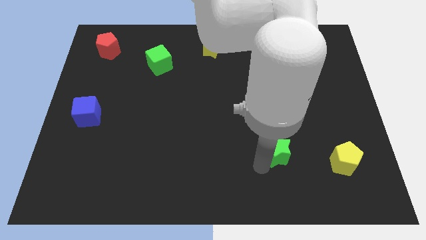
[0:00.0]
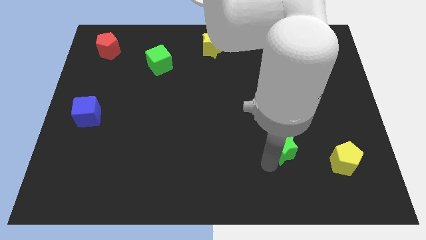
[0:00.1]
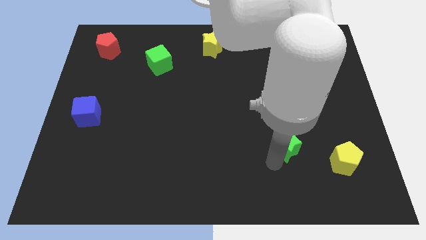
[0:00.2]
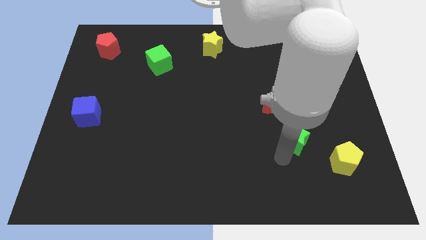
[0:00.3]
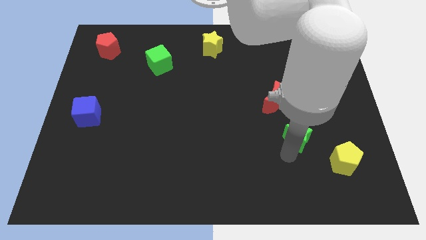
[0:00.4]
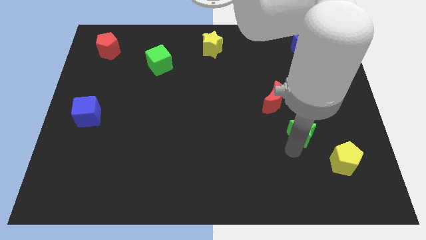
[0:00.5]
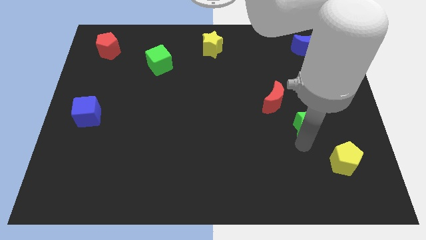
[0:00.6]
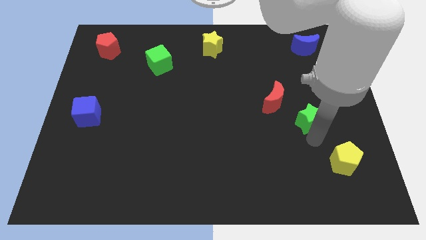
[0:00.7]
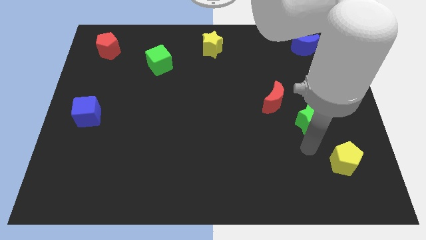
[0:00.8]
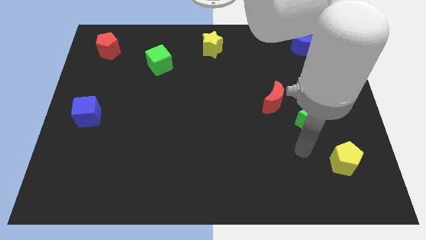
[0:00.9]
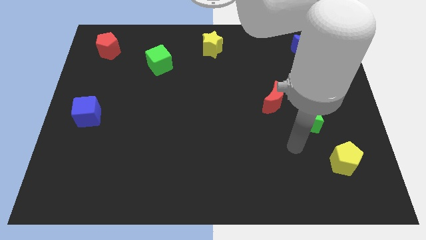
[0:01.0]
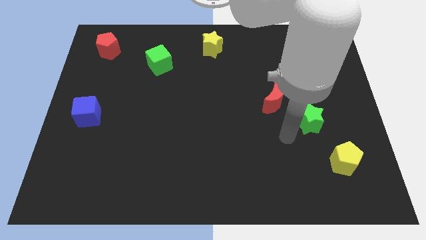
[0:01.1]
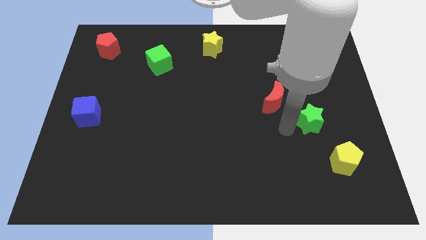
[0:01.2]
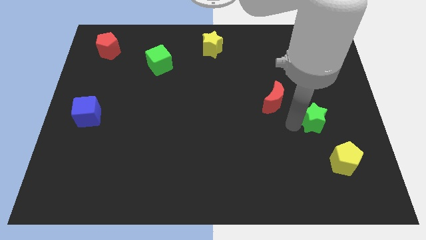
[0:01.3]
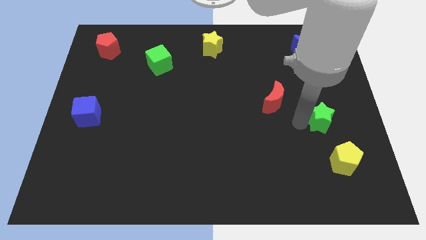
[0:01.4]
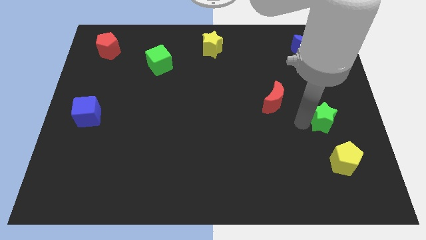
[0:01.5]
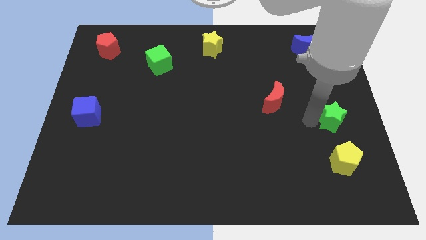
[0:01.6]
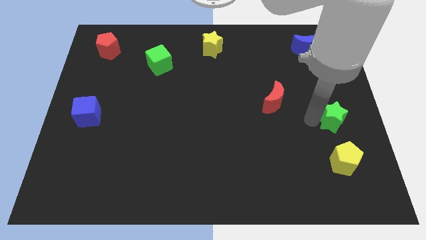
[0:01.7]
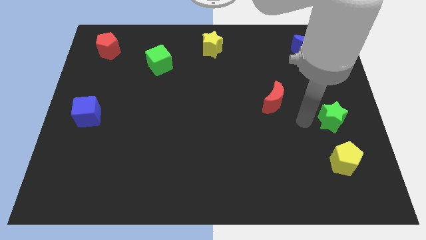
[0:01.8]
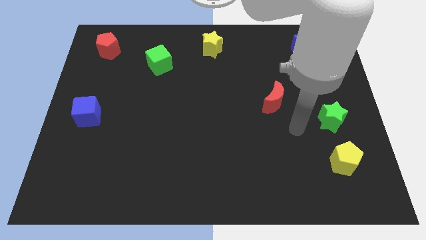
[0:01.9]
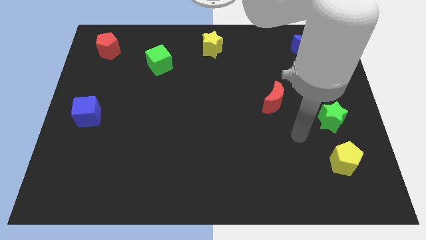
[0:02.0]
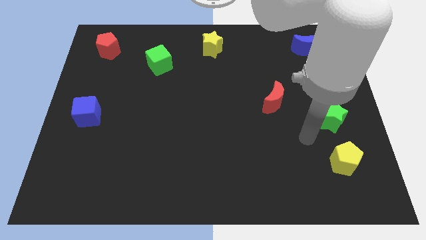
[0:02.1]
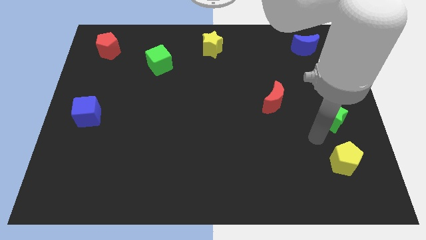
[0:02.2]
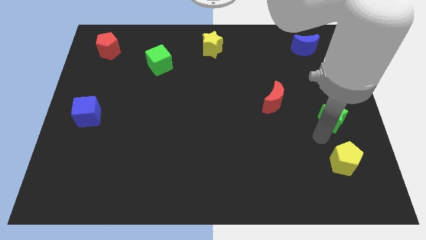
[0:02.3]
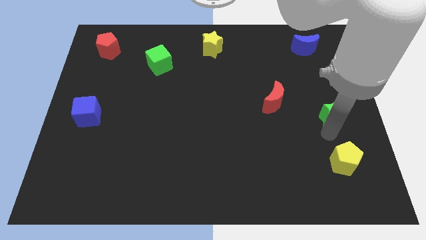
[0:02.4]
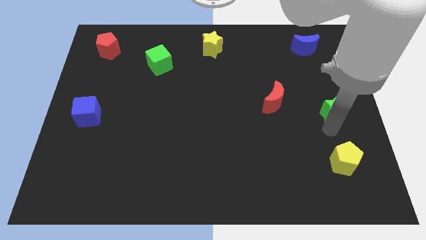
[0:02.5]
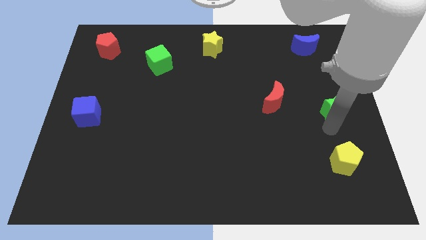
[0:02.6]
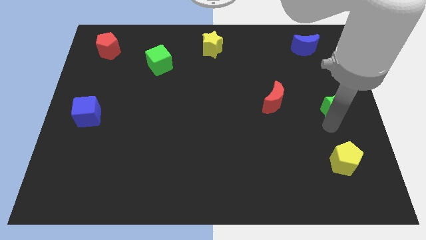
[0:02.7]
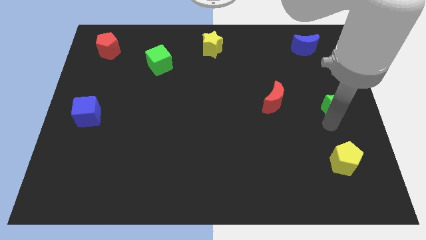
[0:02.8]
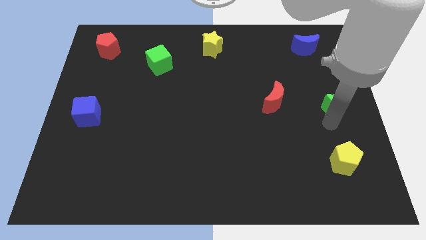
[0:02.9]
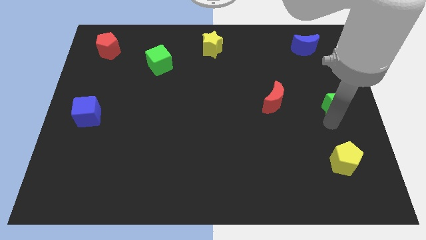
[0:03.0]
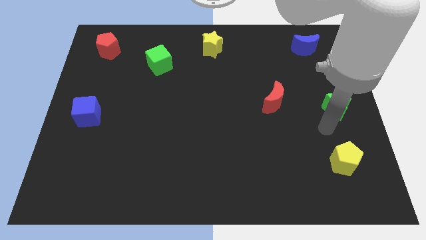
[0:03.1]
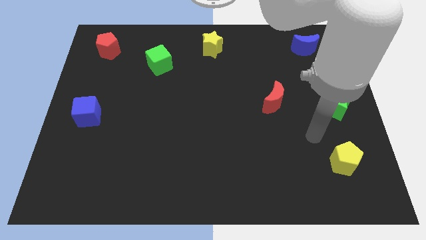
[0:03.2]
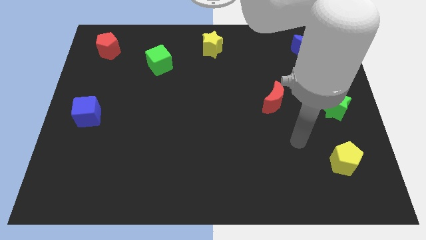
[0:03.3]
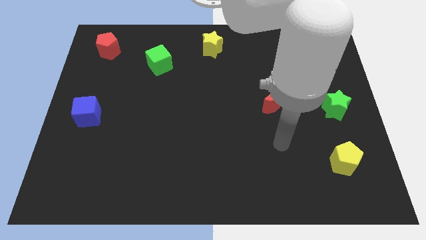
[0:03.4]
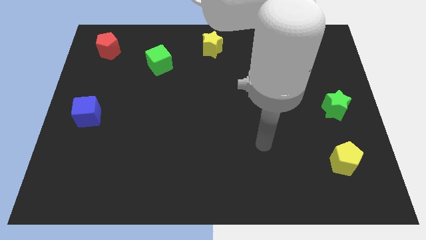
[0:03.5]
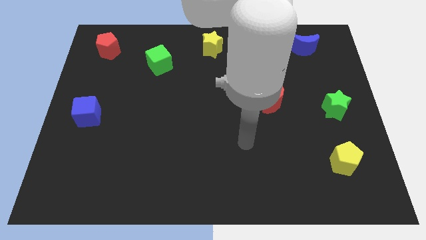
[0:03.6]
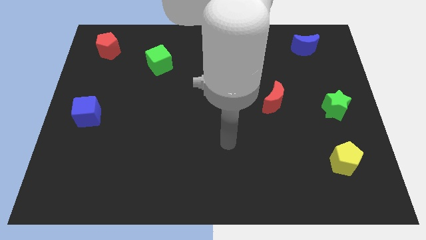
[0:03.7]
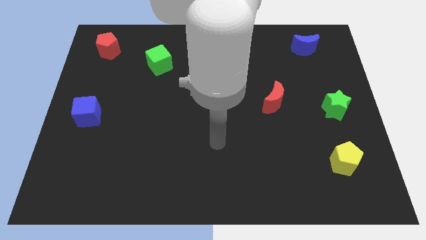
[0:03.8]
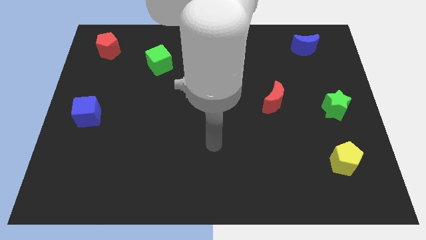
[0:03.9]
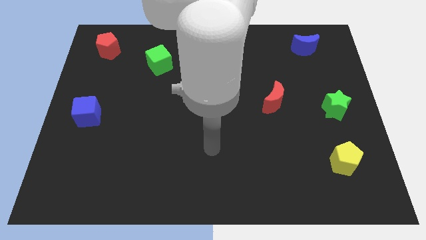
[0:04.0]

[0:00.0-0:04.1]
slide green star towards center right

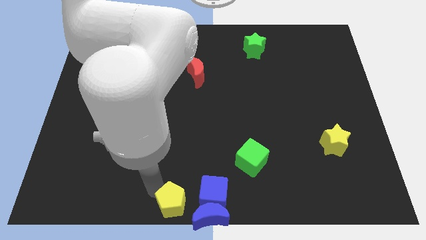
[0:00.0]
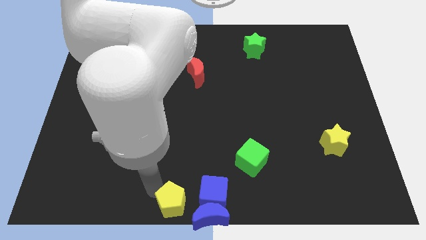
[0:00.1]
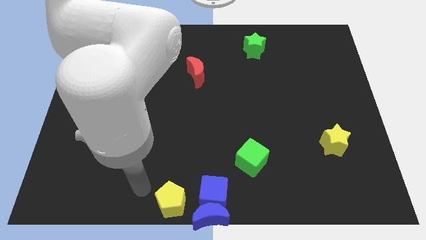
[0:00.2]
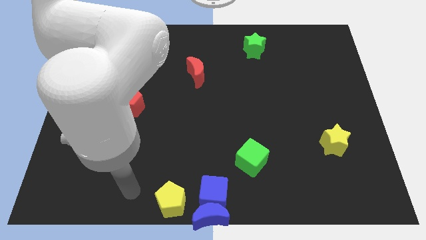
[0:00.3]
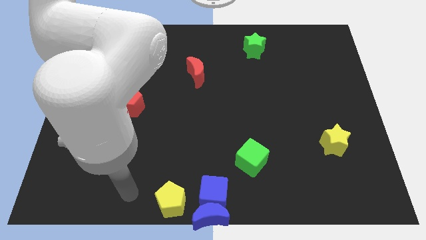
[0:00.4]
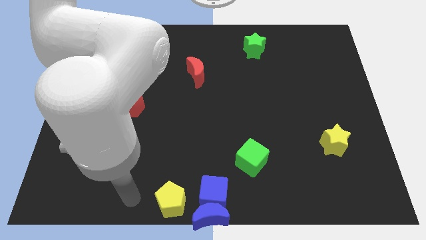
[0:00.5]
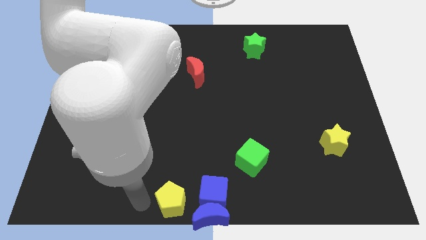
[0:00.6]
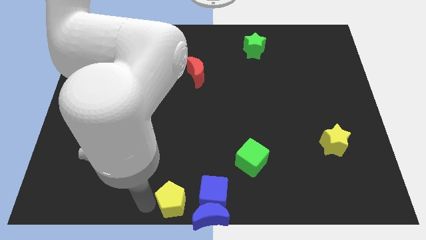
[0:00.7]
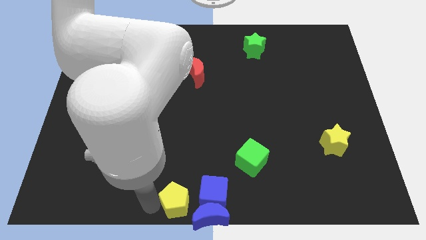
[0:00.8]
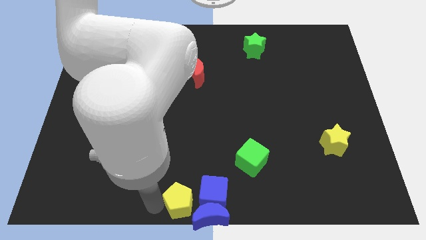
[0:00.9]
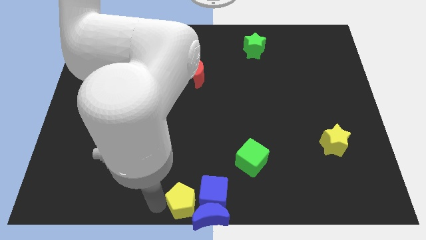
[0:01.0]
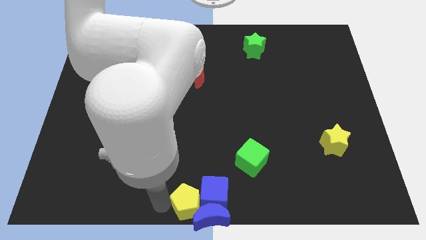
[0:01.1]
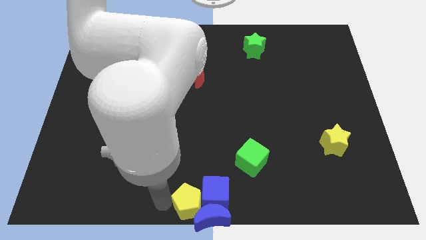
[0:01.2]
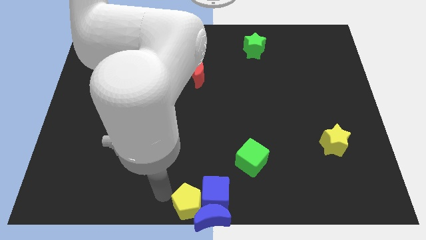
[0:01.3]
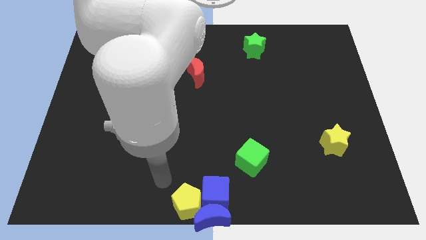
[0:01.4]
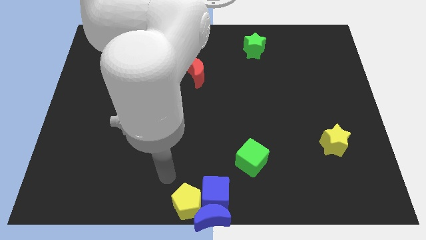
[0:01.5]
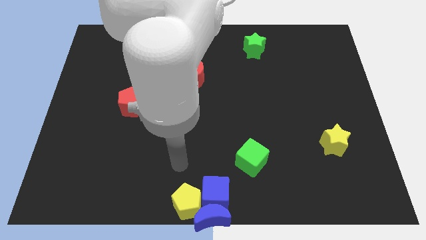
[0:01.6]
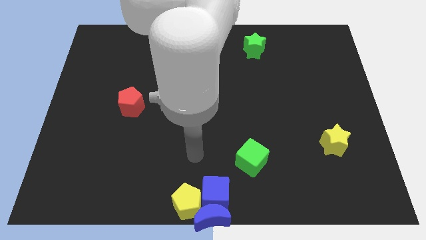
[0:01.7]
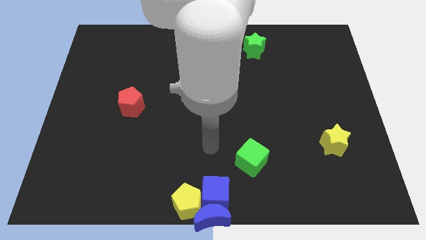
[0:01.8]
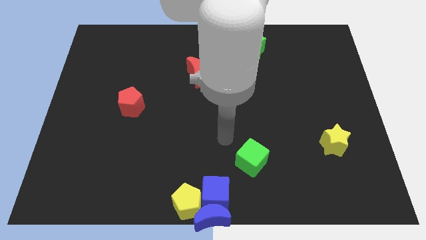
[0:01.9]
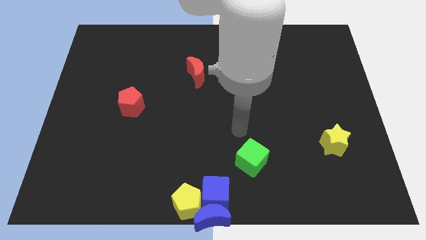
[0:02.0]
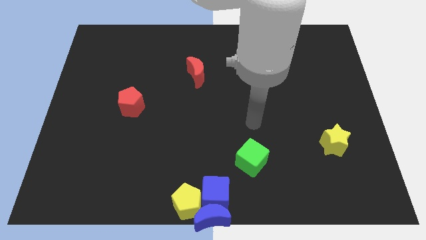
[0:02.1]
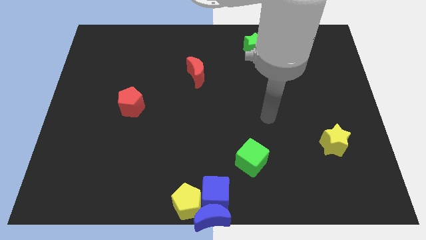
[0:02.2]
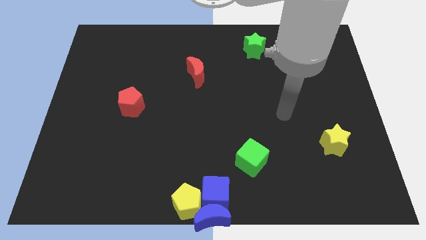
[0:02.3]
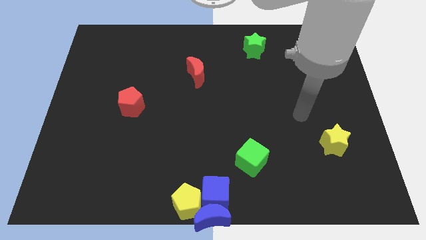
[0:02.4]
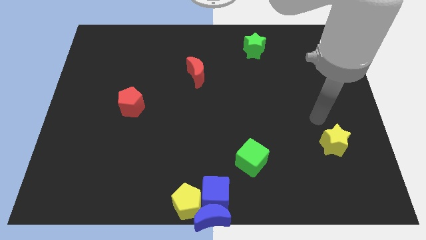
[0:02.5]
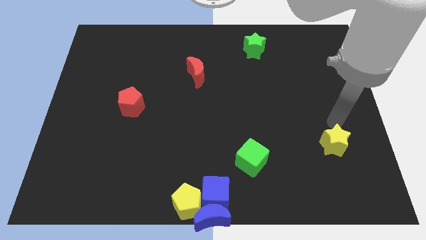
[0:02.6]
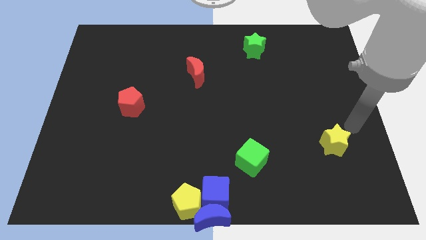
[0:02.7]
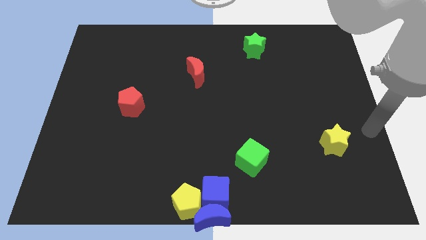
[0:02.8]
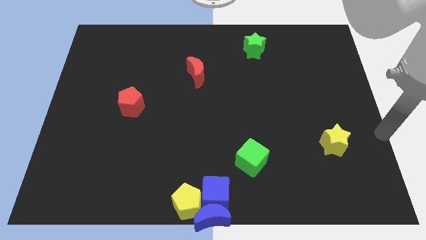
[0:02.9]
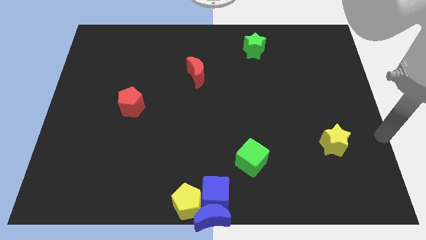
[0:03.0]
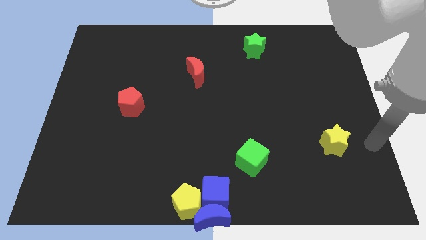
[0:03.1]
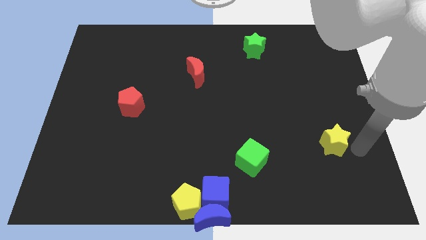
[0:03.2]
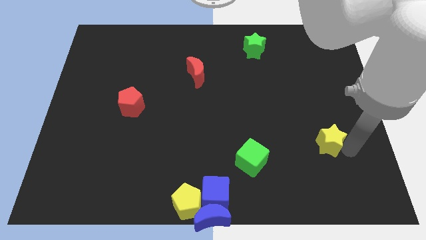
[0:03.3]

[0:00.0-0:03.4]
place the arm right to the yellow star

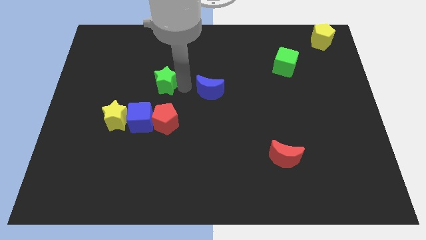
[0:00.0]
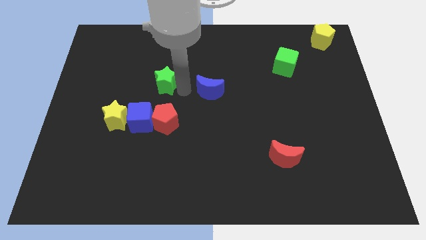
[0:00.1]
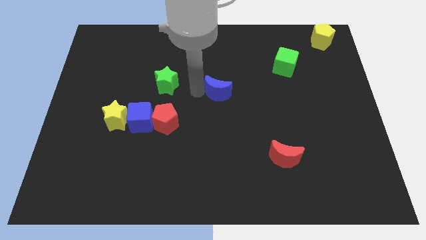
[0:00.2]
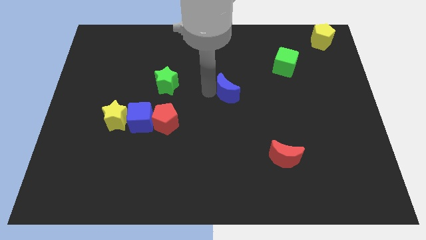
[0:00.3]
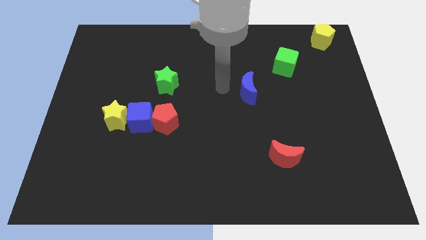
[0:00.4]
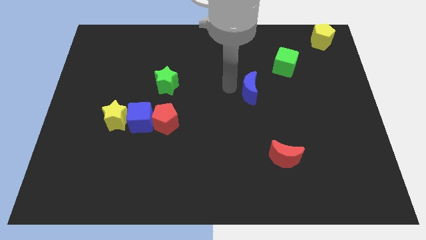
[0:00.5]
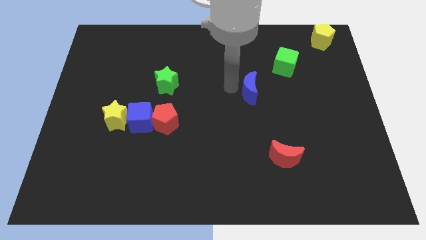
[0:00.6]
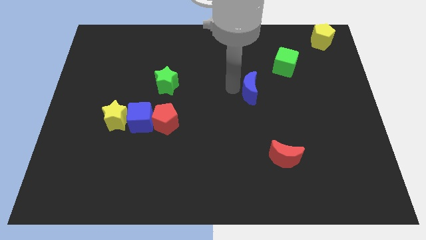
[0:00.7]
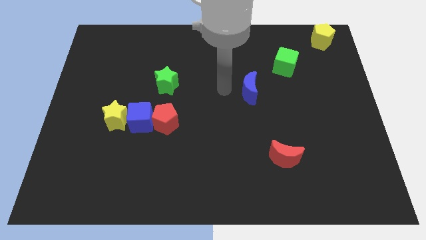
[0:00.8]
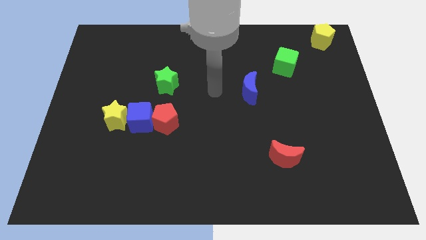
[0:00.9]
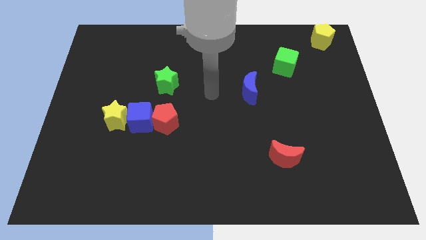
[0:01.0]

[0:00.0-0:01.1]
place the blue crescent diagonally to the bottom left side of the green cube

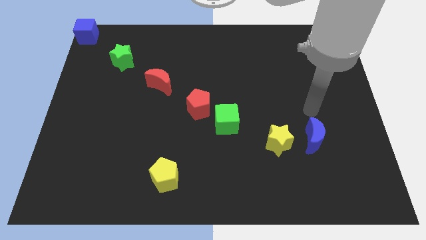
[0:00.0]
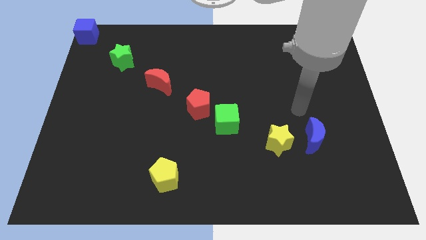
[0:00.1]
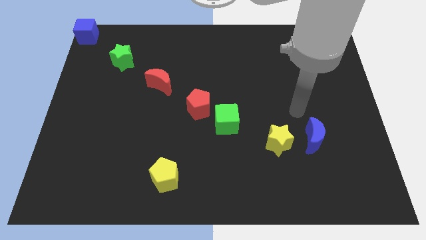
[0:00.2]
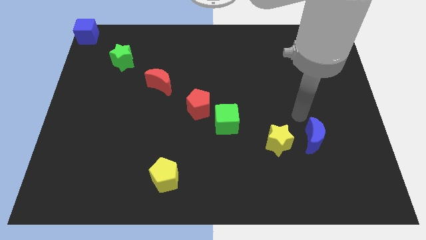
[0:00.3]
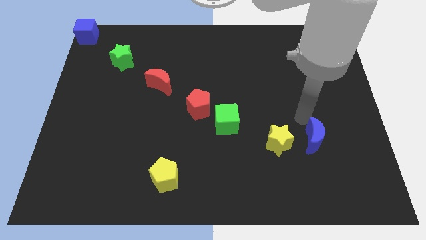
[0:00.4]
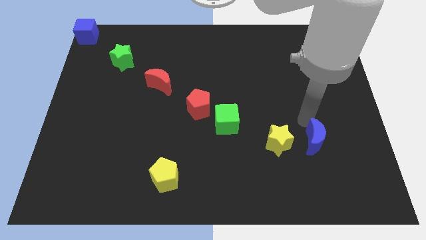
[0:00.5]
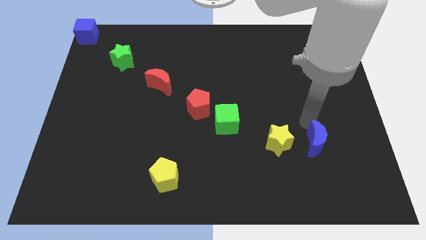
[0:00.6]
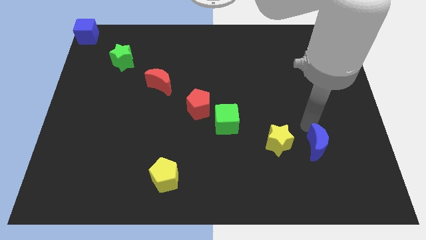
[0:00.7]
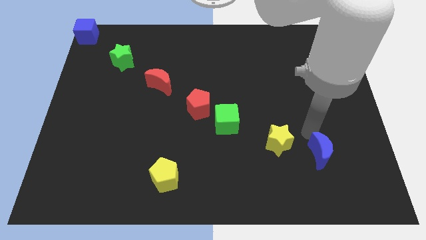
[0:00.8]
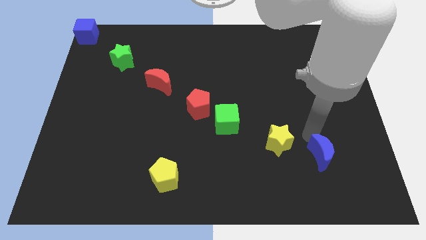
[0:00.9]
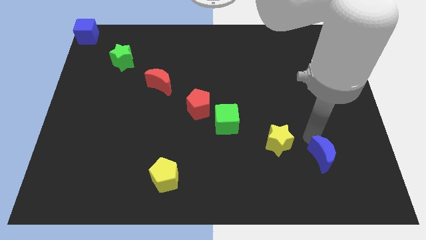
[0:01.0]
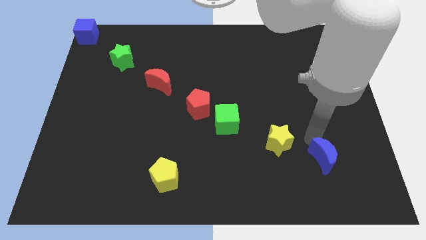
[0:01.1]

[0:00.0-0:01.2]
push the blue moon slightly to the bottom of the board
